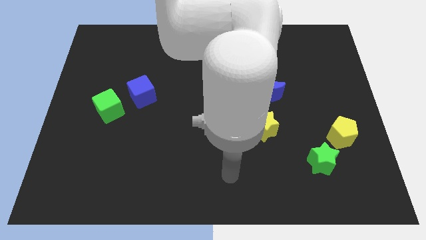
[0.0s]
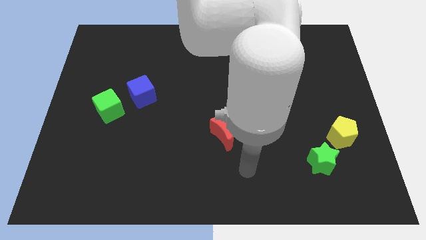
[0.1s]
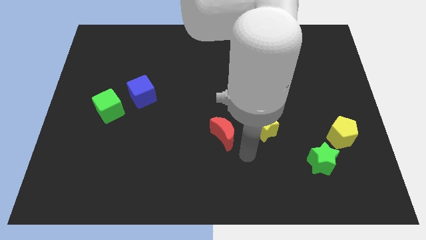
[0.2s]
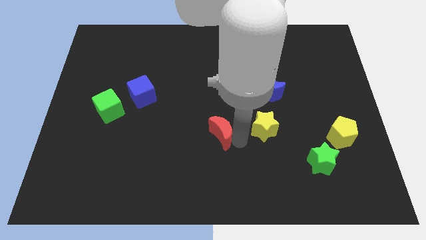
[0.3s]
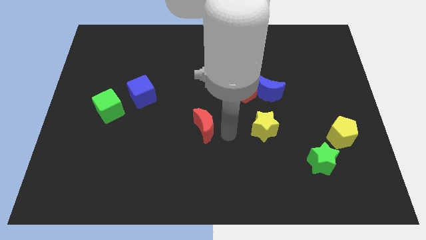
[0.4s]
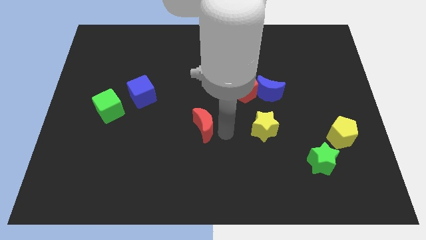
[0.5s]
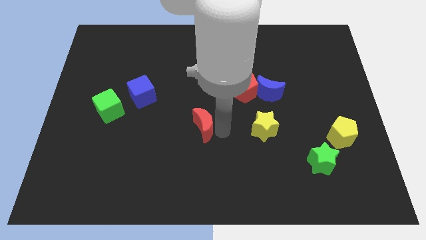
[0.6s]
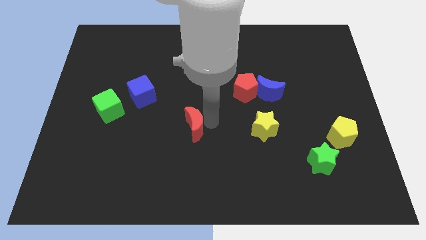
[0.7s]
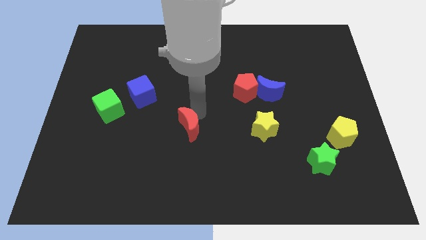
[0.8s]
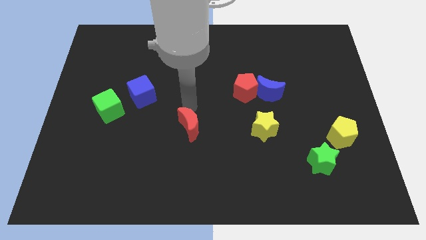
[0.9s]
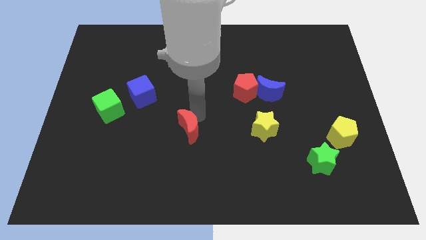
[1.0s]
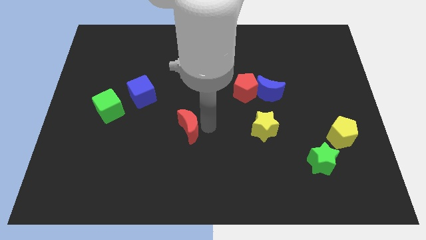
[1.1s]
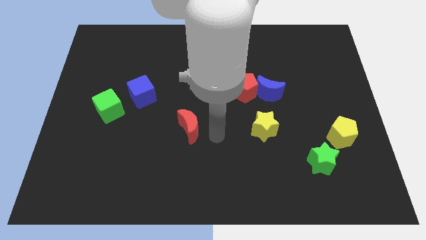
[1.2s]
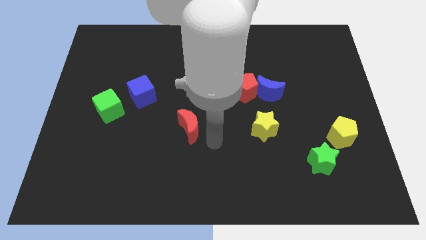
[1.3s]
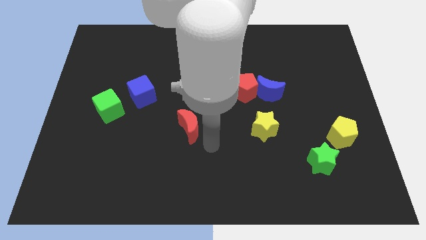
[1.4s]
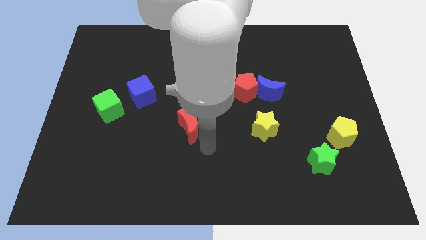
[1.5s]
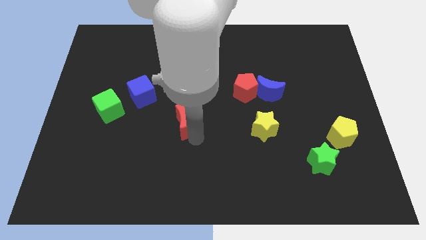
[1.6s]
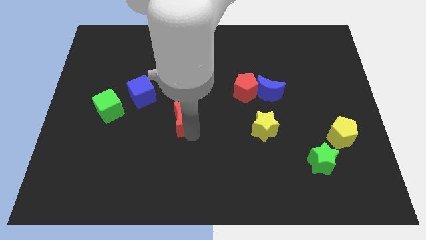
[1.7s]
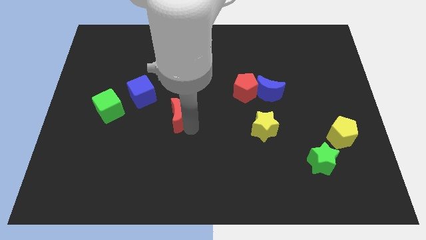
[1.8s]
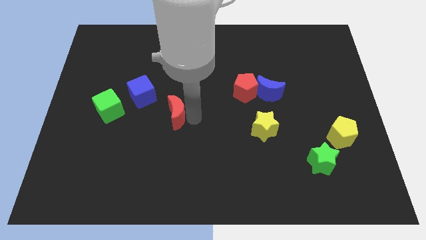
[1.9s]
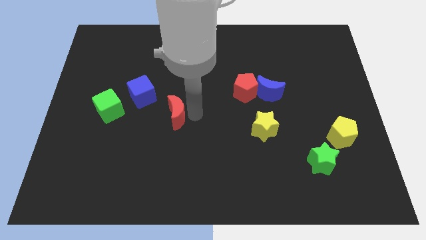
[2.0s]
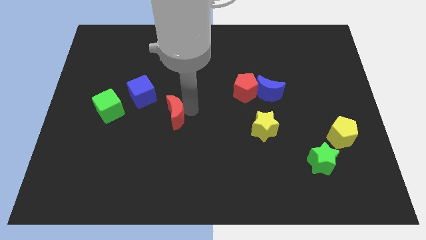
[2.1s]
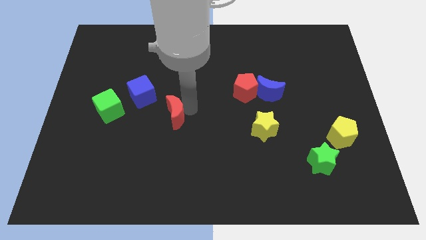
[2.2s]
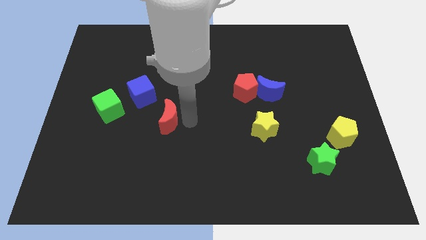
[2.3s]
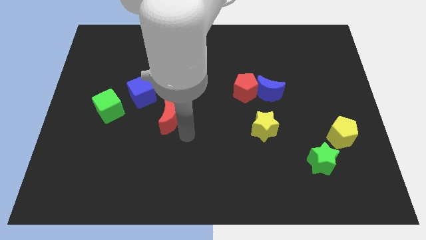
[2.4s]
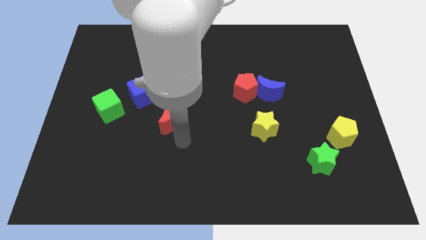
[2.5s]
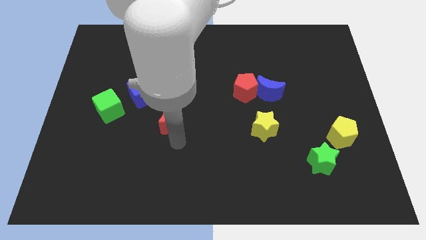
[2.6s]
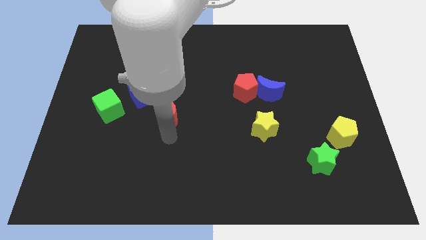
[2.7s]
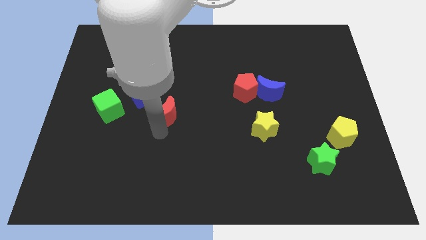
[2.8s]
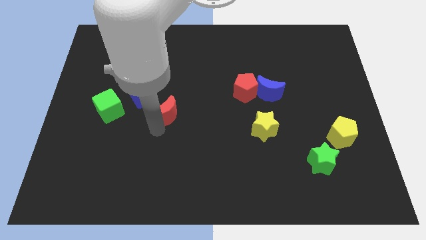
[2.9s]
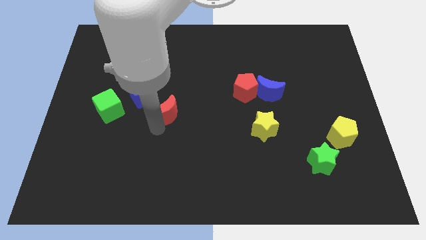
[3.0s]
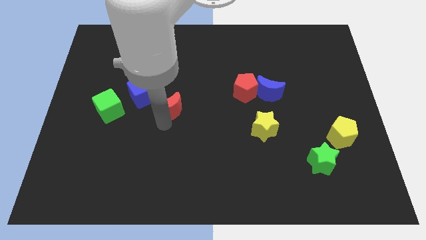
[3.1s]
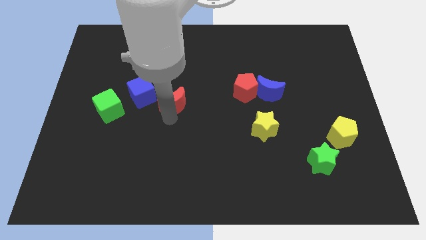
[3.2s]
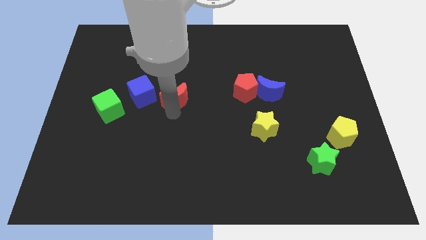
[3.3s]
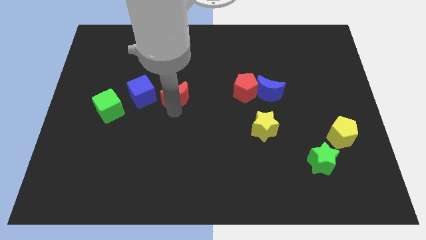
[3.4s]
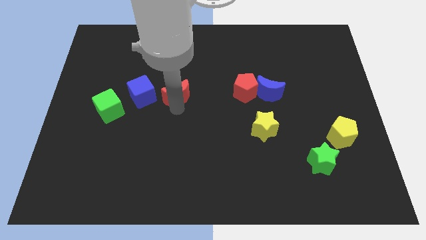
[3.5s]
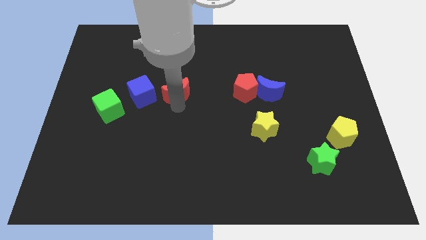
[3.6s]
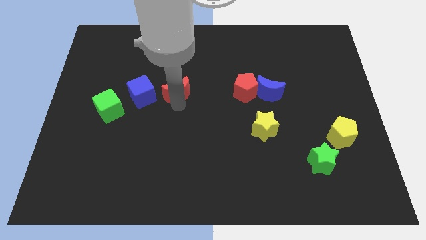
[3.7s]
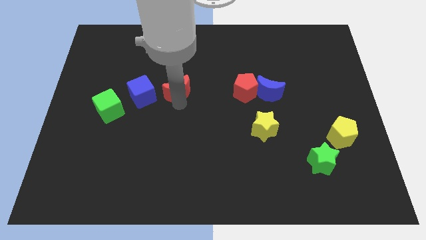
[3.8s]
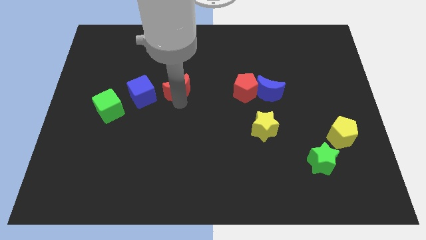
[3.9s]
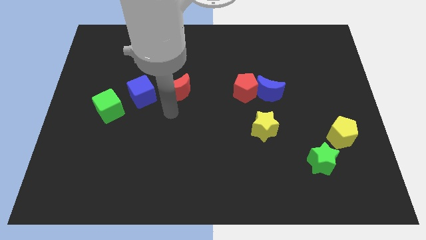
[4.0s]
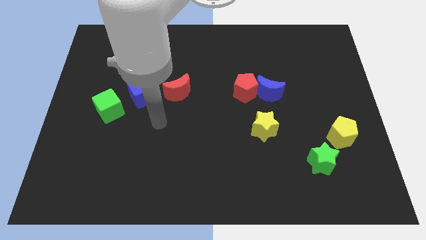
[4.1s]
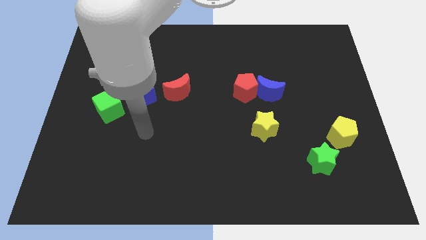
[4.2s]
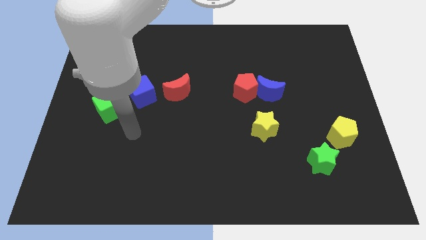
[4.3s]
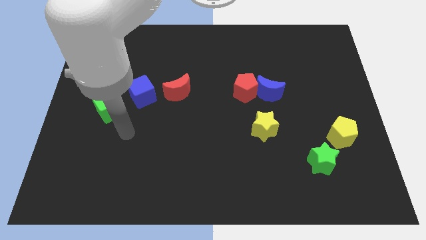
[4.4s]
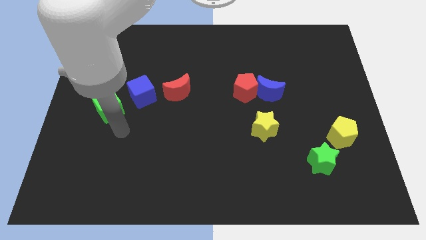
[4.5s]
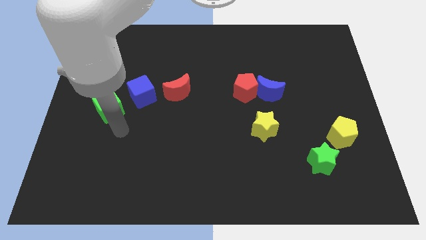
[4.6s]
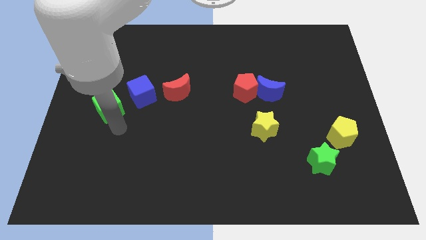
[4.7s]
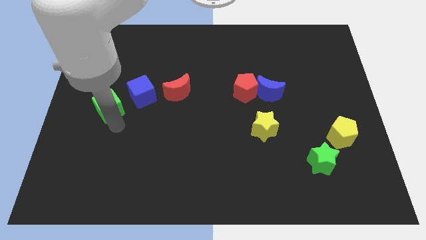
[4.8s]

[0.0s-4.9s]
place the red crescent near the blue cube

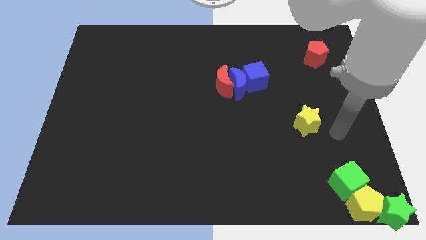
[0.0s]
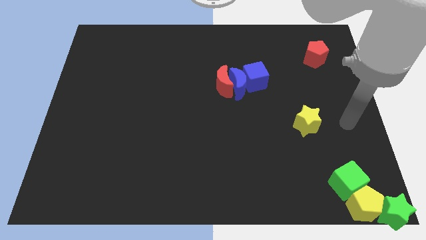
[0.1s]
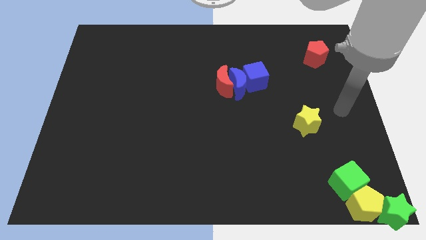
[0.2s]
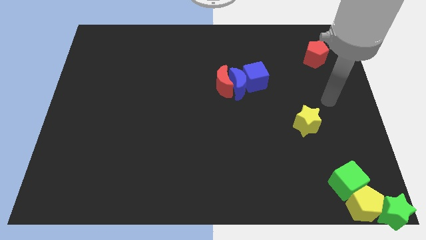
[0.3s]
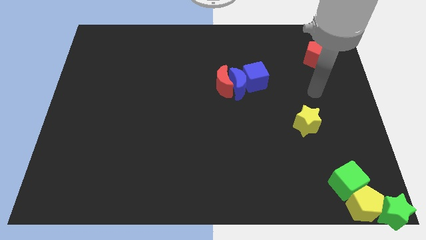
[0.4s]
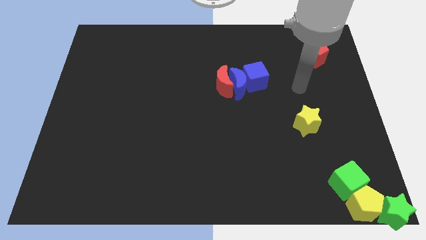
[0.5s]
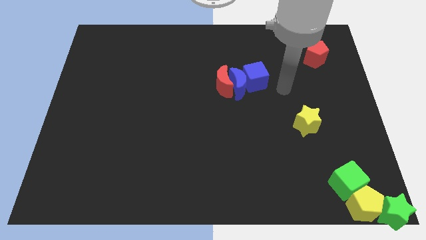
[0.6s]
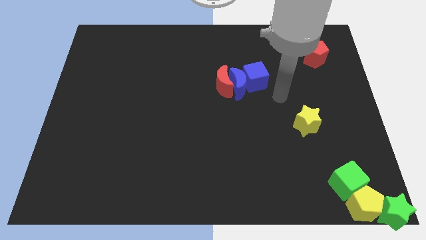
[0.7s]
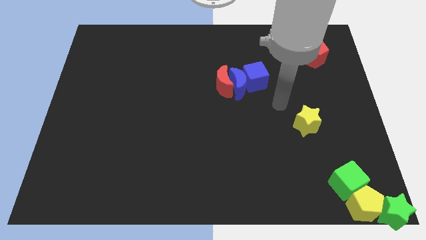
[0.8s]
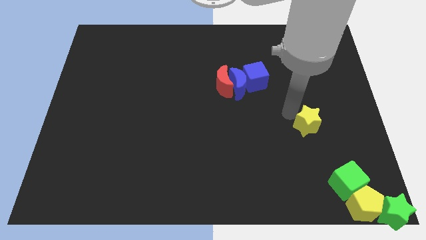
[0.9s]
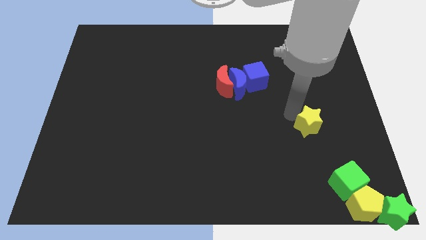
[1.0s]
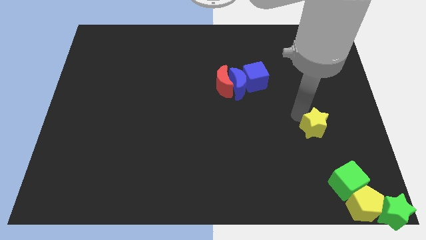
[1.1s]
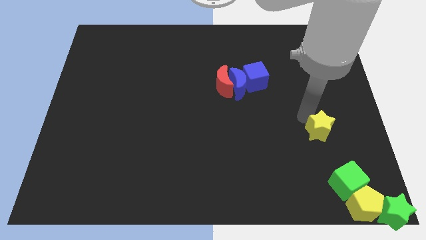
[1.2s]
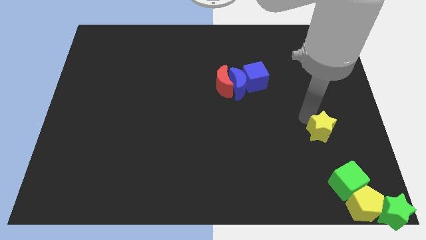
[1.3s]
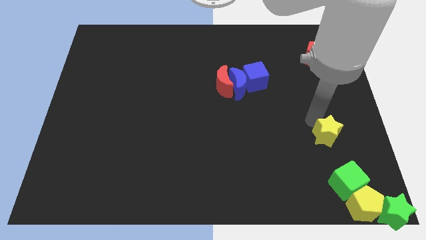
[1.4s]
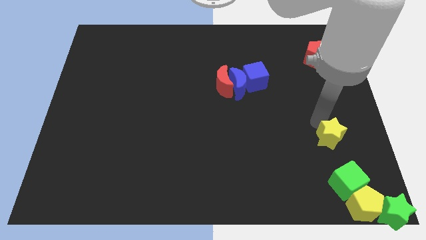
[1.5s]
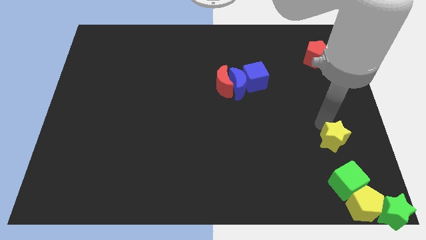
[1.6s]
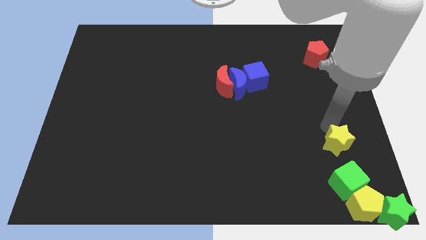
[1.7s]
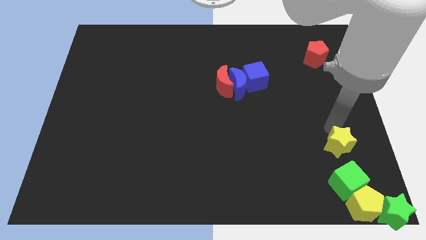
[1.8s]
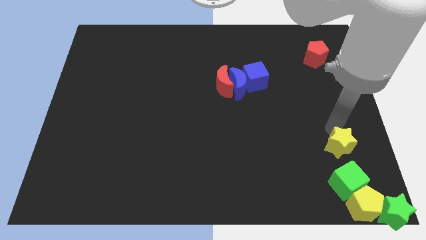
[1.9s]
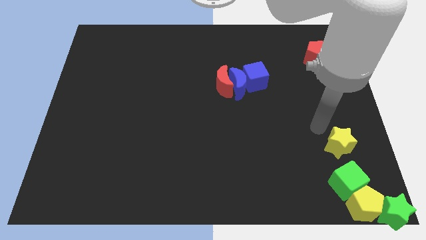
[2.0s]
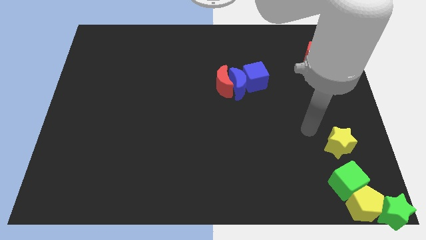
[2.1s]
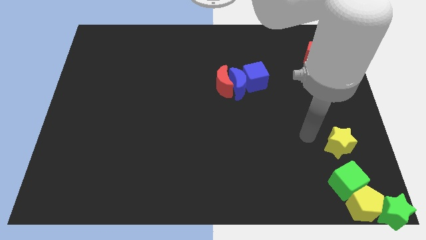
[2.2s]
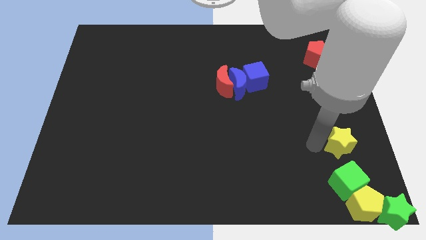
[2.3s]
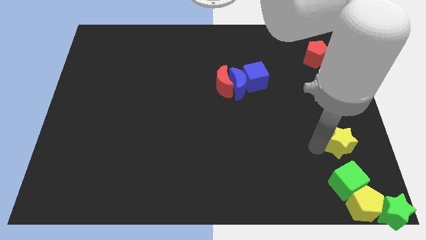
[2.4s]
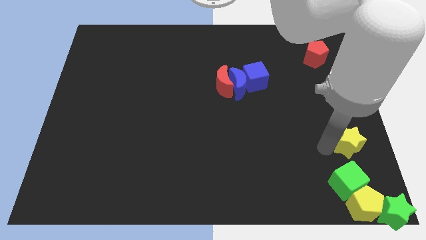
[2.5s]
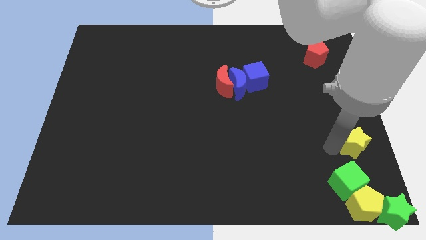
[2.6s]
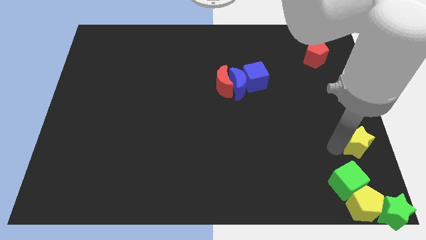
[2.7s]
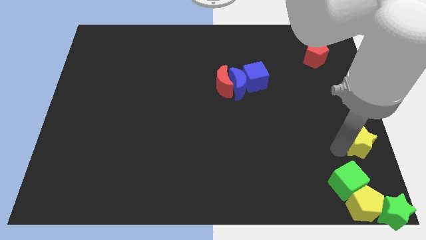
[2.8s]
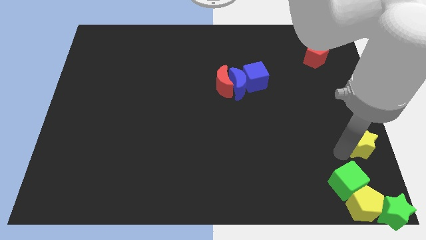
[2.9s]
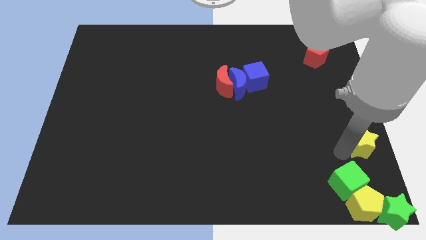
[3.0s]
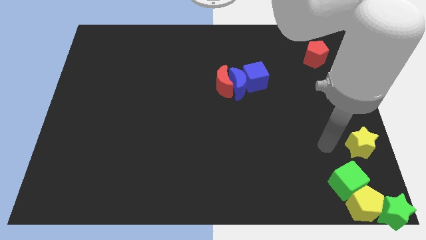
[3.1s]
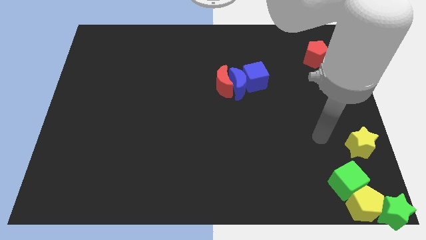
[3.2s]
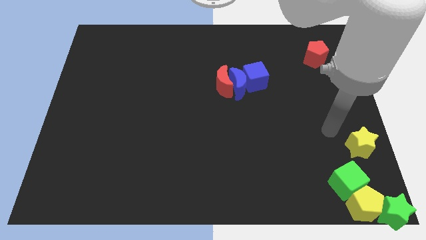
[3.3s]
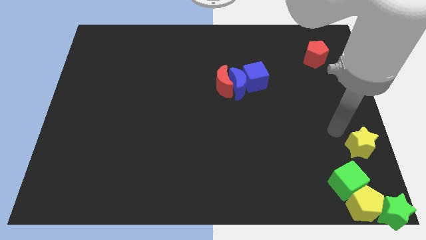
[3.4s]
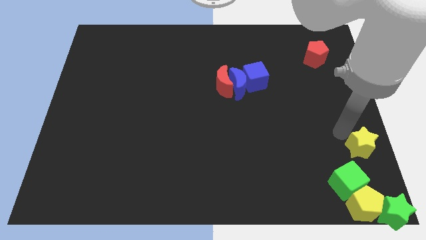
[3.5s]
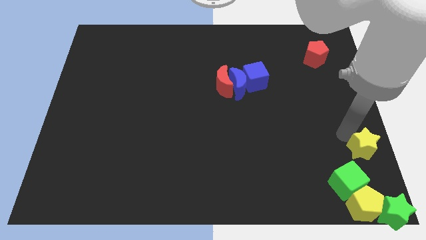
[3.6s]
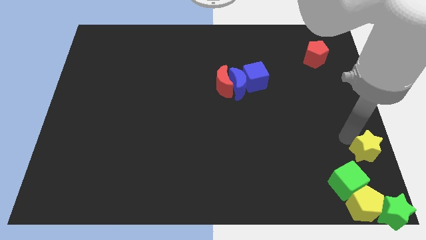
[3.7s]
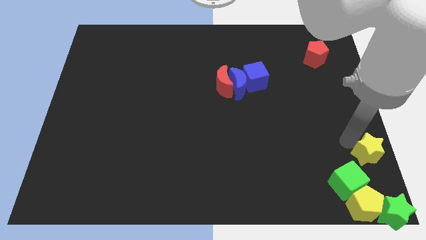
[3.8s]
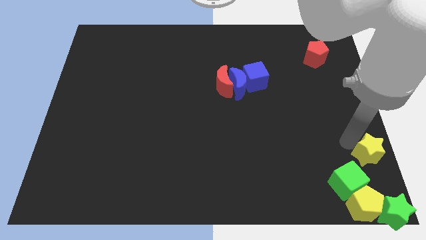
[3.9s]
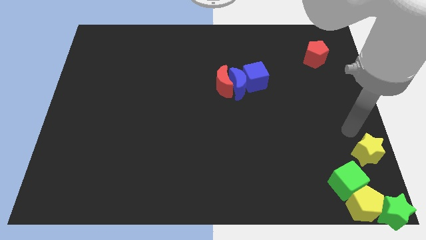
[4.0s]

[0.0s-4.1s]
place the star diagonally right to the green cube

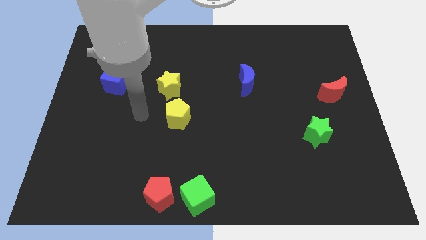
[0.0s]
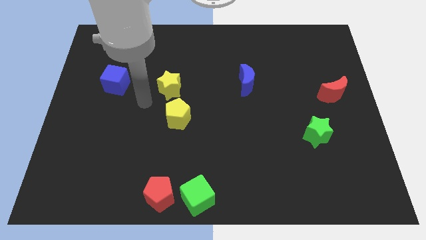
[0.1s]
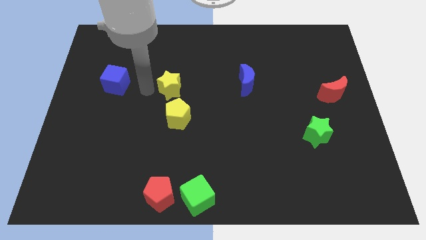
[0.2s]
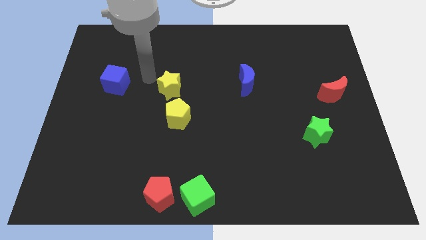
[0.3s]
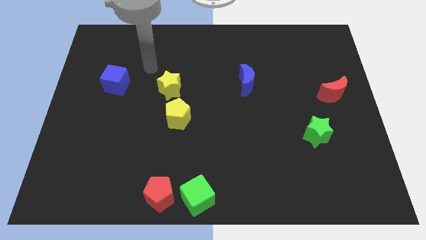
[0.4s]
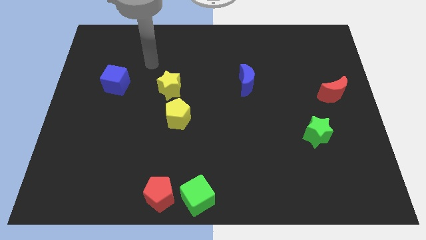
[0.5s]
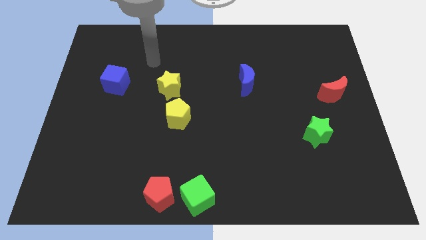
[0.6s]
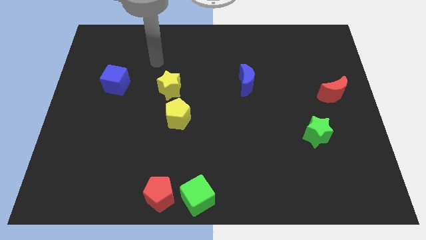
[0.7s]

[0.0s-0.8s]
place your arm to the top of the yellow star
